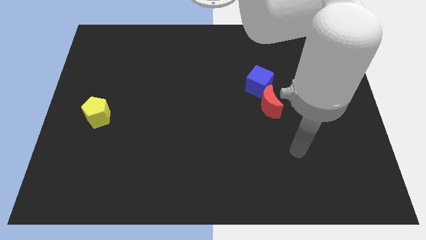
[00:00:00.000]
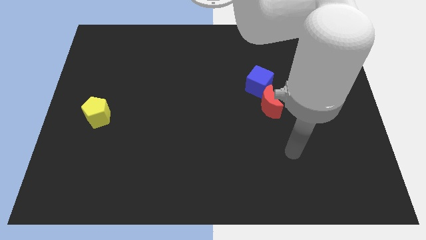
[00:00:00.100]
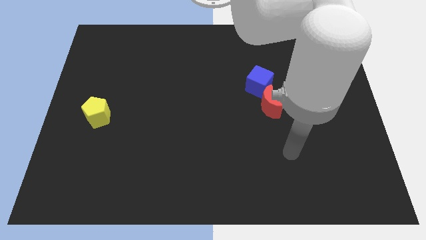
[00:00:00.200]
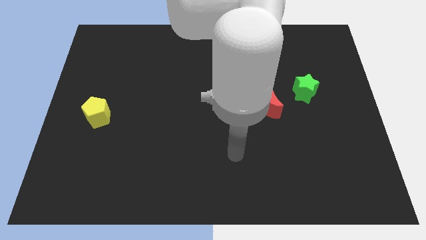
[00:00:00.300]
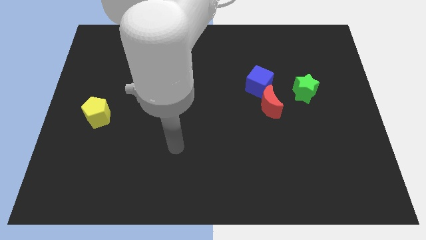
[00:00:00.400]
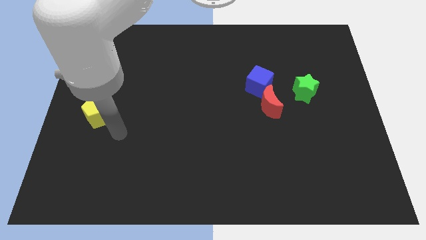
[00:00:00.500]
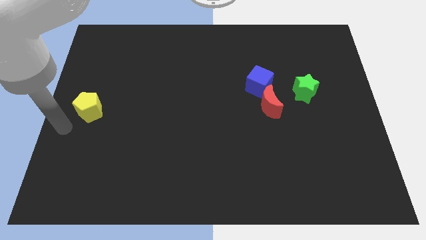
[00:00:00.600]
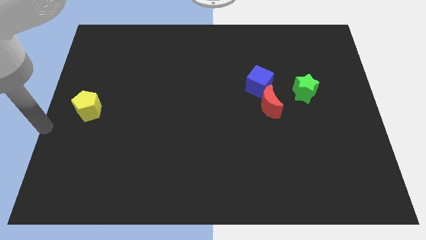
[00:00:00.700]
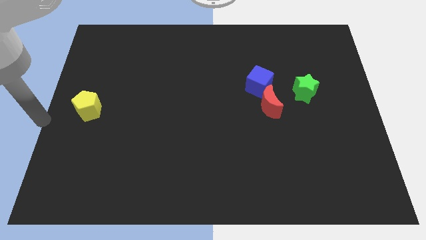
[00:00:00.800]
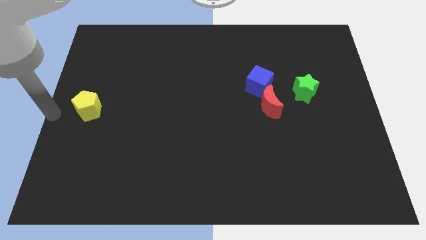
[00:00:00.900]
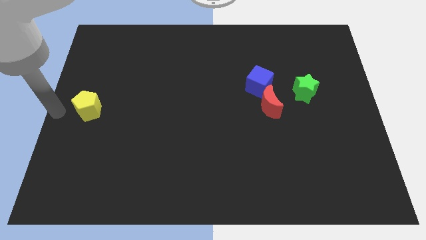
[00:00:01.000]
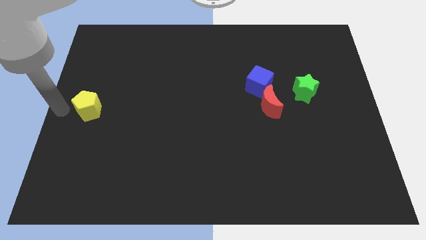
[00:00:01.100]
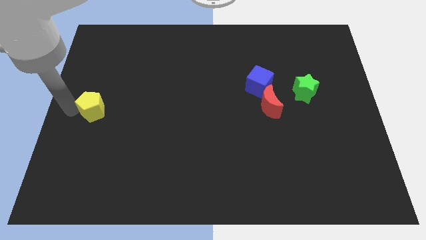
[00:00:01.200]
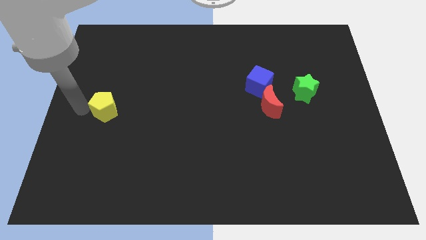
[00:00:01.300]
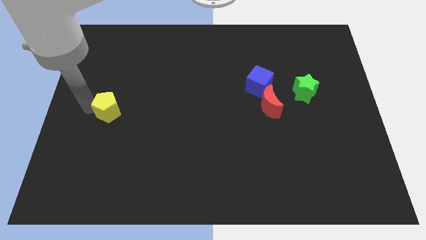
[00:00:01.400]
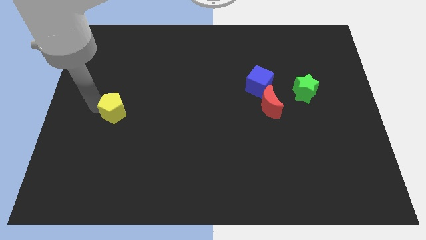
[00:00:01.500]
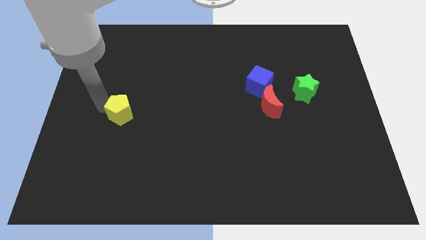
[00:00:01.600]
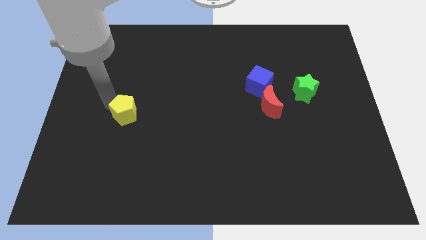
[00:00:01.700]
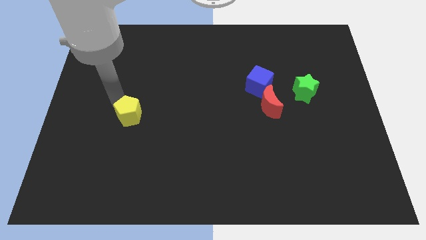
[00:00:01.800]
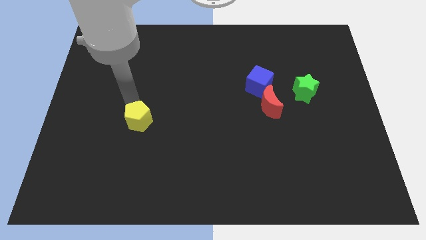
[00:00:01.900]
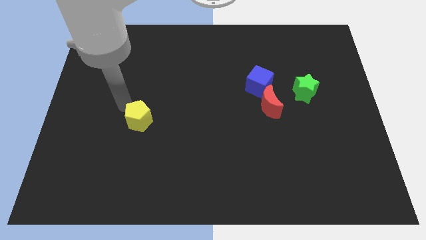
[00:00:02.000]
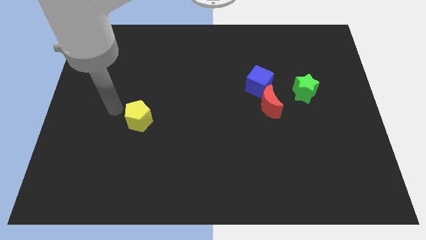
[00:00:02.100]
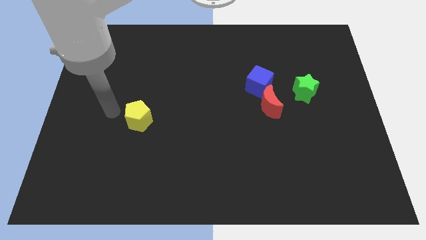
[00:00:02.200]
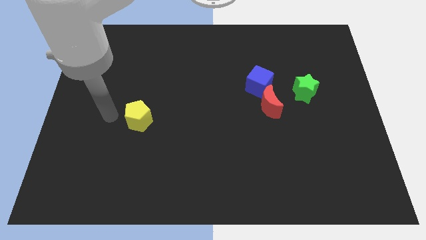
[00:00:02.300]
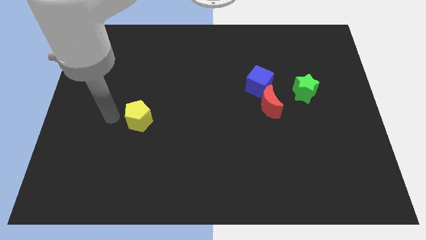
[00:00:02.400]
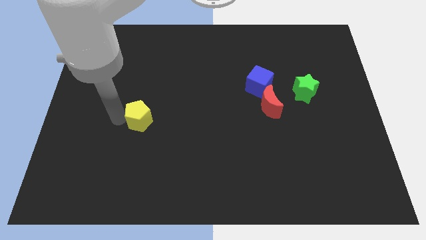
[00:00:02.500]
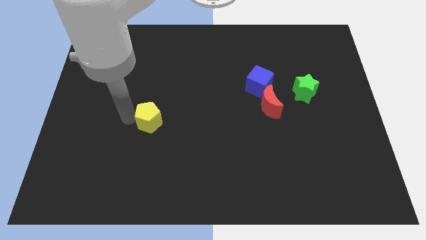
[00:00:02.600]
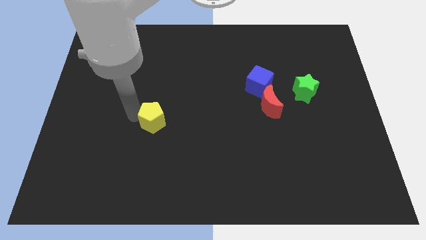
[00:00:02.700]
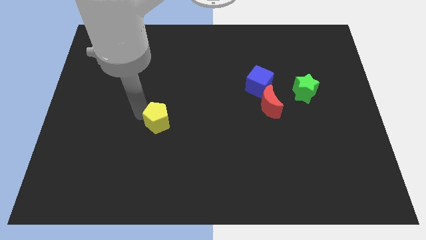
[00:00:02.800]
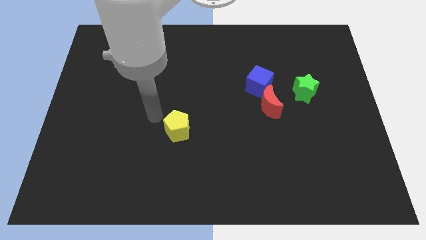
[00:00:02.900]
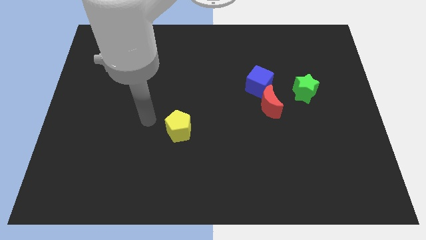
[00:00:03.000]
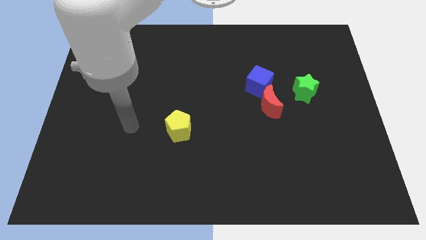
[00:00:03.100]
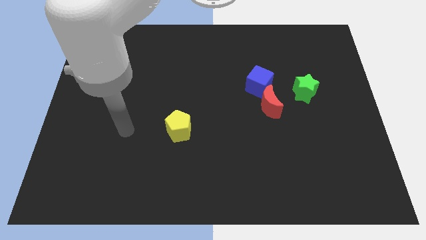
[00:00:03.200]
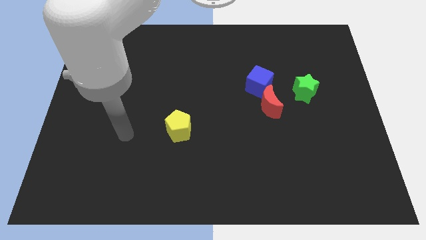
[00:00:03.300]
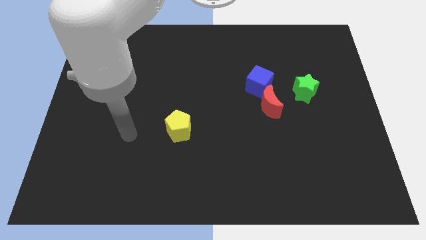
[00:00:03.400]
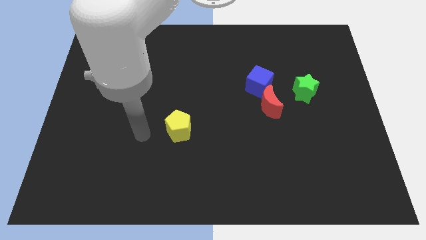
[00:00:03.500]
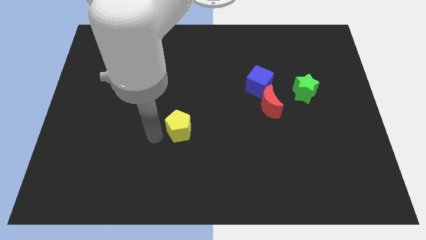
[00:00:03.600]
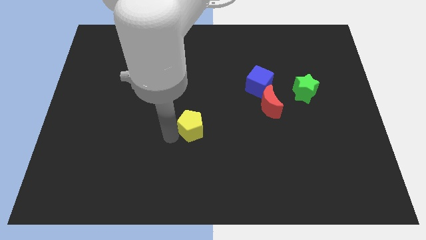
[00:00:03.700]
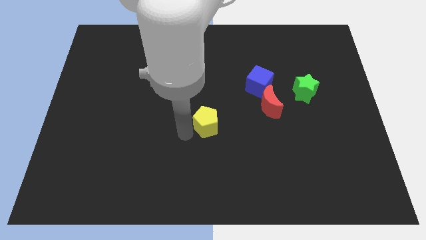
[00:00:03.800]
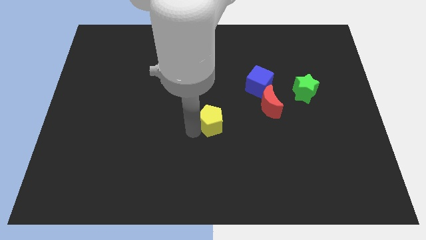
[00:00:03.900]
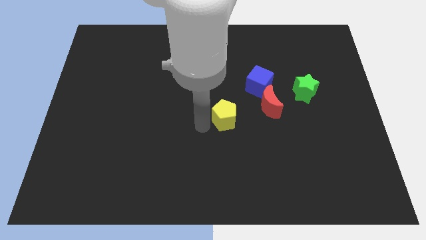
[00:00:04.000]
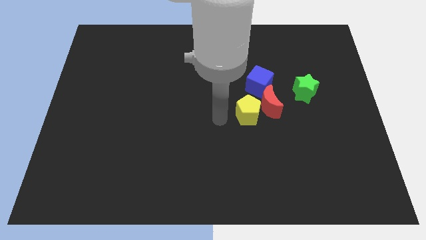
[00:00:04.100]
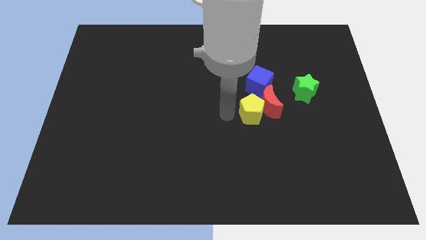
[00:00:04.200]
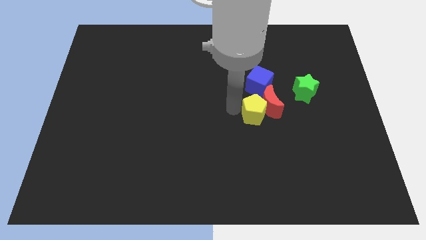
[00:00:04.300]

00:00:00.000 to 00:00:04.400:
push the yellow block to the moon

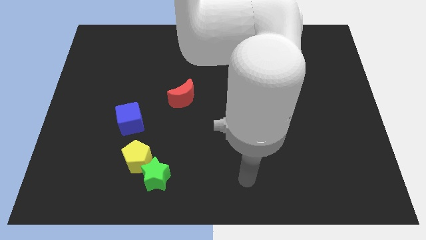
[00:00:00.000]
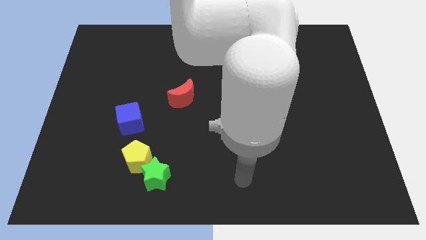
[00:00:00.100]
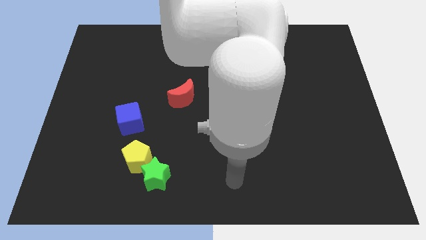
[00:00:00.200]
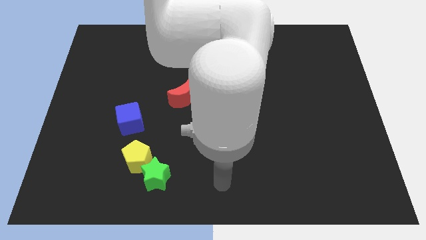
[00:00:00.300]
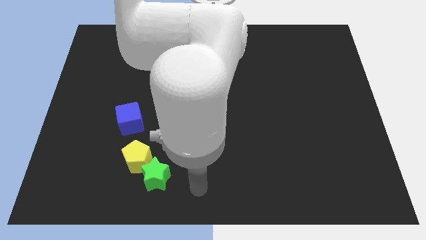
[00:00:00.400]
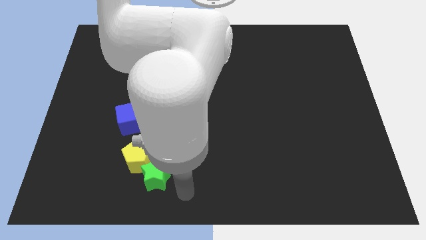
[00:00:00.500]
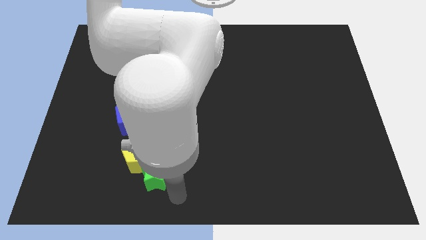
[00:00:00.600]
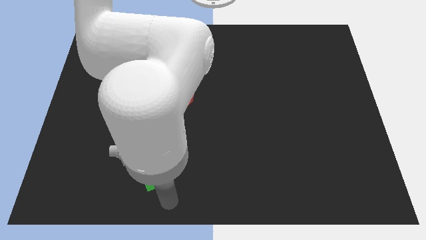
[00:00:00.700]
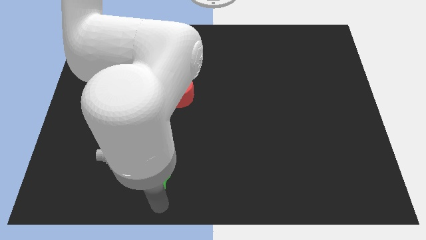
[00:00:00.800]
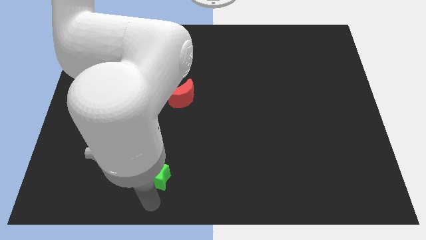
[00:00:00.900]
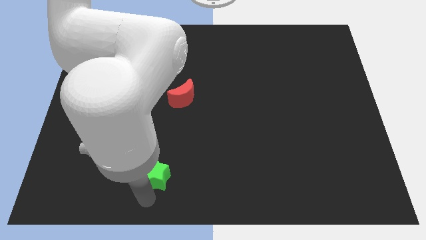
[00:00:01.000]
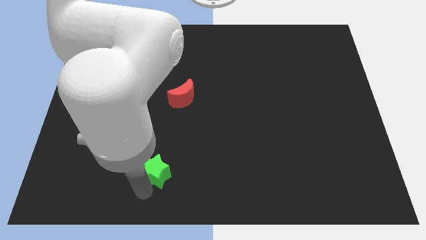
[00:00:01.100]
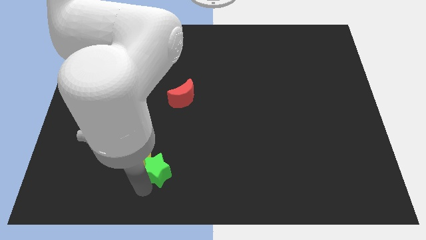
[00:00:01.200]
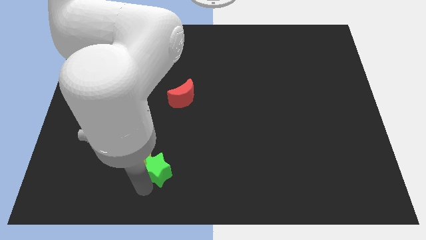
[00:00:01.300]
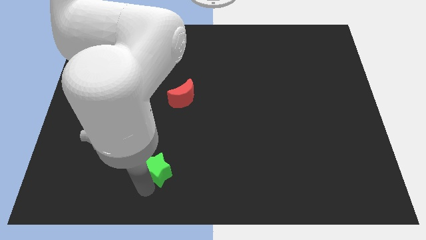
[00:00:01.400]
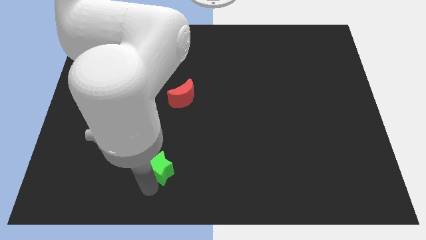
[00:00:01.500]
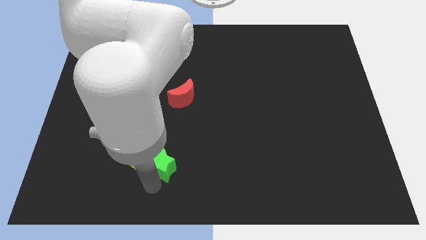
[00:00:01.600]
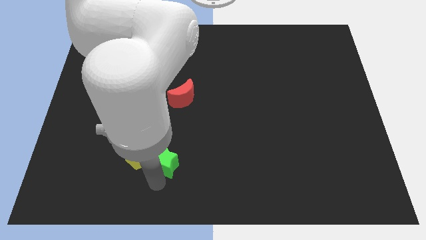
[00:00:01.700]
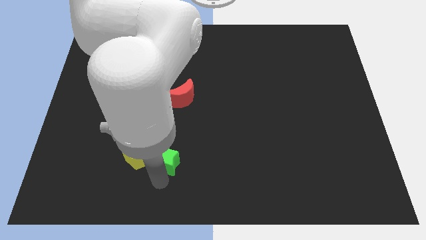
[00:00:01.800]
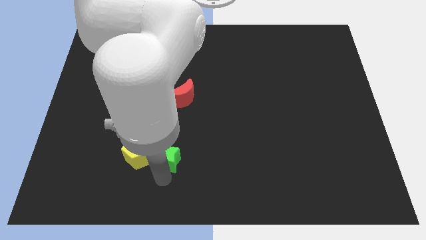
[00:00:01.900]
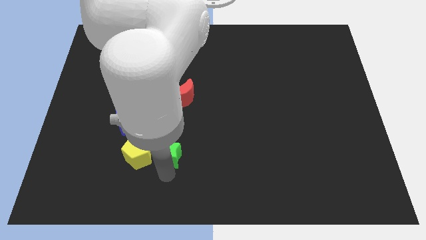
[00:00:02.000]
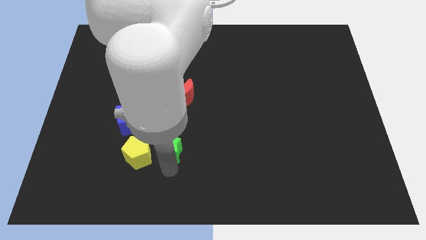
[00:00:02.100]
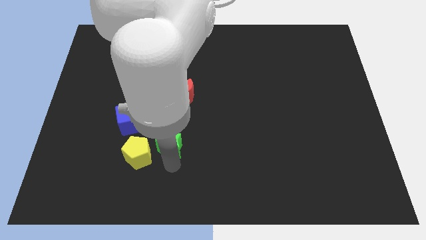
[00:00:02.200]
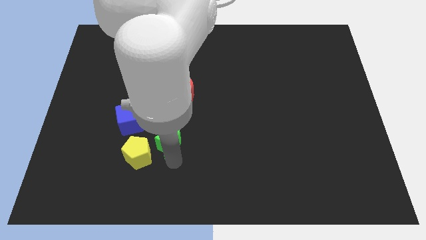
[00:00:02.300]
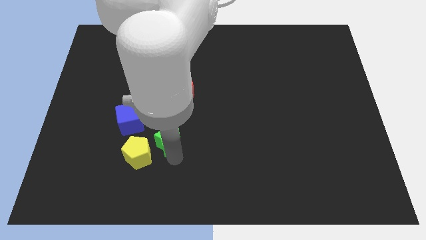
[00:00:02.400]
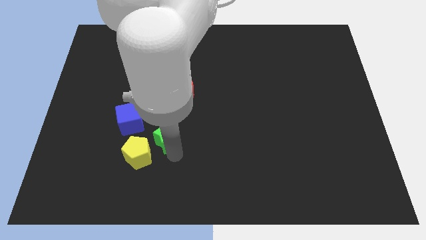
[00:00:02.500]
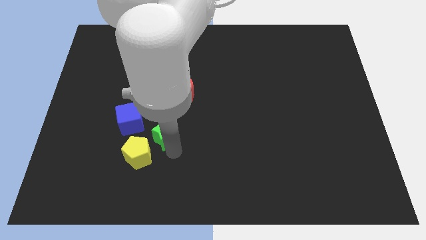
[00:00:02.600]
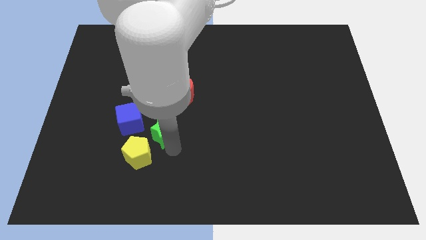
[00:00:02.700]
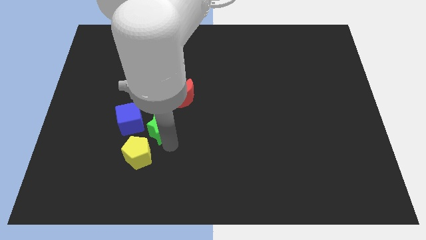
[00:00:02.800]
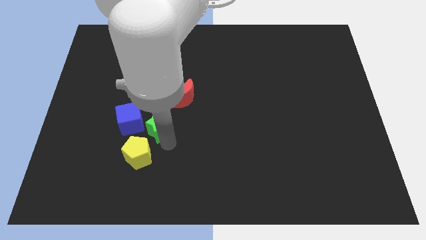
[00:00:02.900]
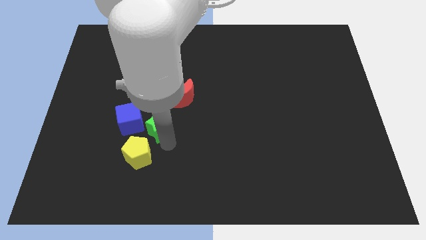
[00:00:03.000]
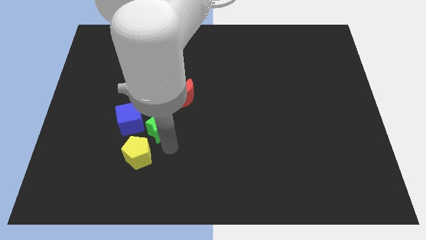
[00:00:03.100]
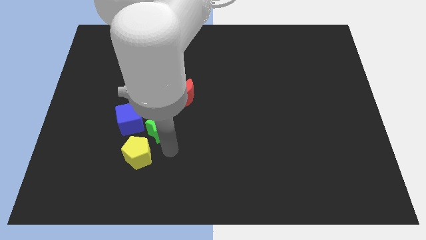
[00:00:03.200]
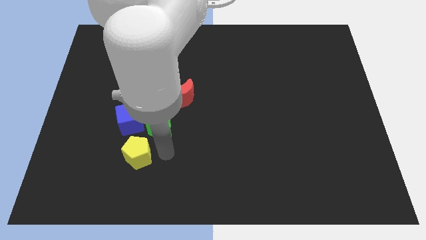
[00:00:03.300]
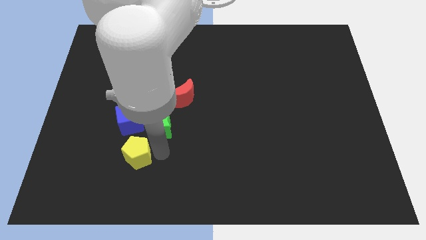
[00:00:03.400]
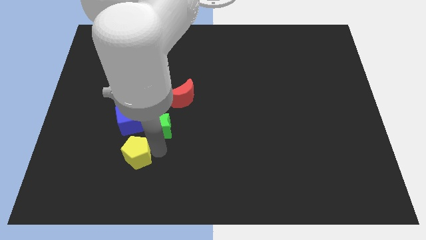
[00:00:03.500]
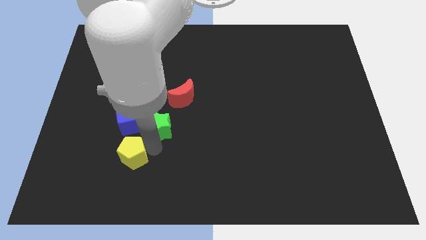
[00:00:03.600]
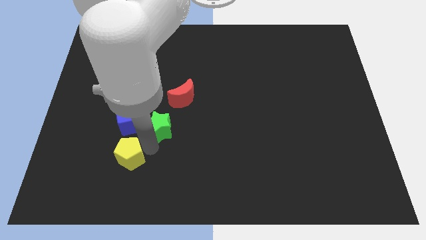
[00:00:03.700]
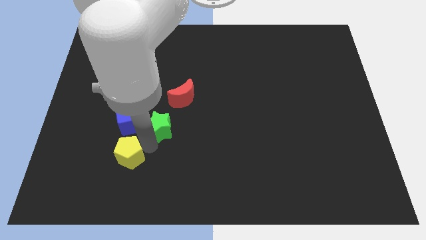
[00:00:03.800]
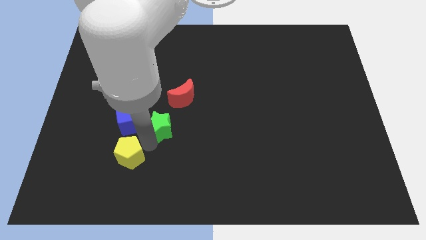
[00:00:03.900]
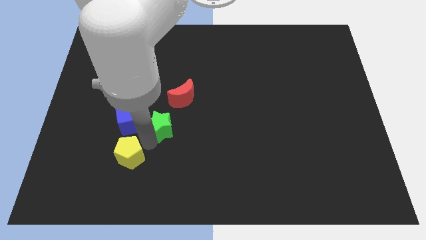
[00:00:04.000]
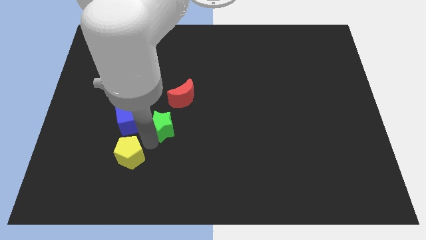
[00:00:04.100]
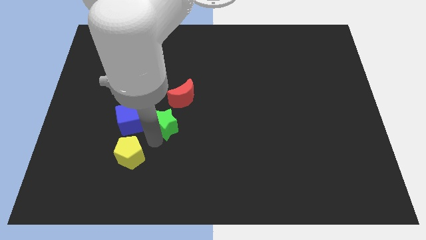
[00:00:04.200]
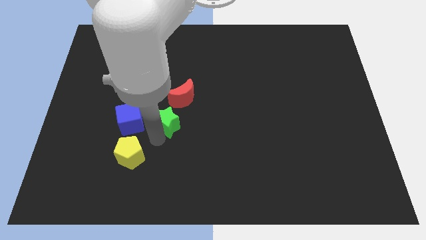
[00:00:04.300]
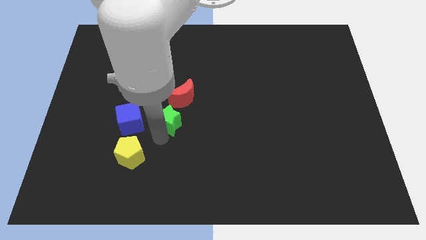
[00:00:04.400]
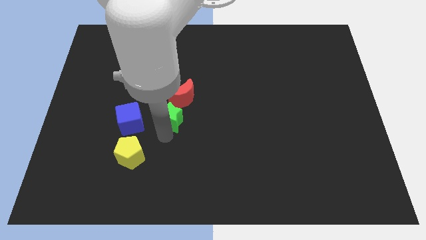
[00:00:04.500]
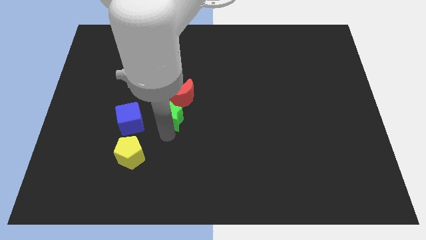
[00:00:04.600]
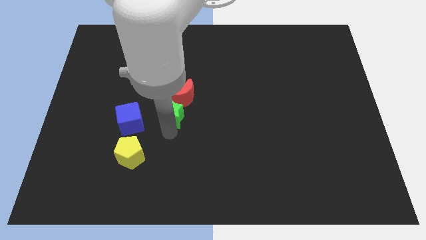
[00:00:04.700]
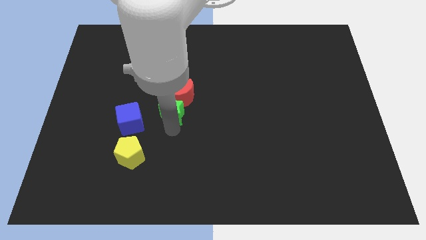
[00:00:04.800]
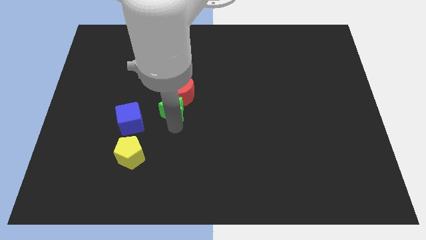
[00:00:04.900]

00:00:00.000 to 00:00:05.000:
slide the star close to the red block
